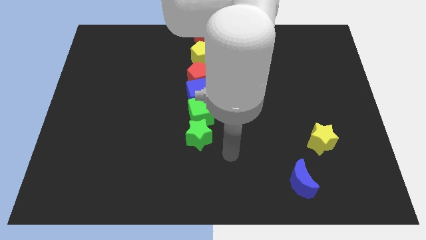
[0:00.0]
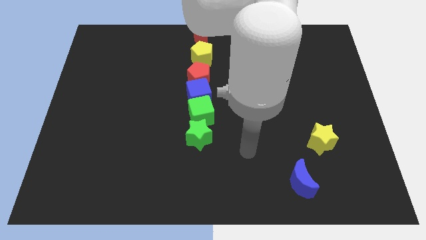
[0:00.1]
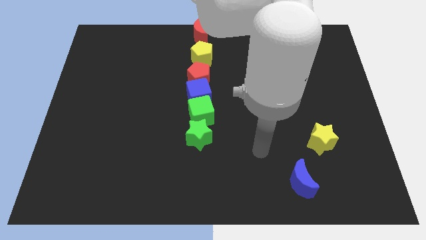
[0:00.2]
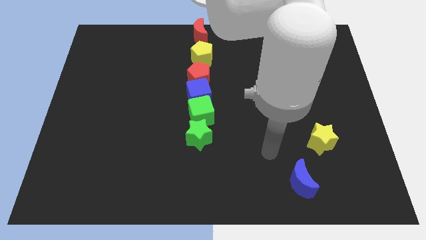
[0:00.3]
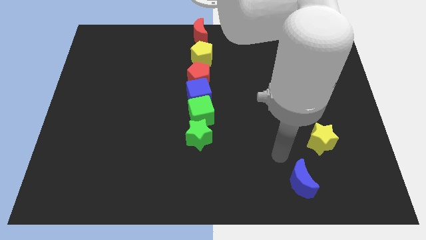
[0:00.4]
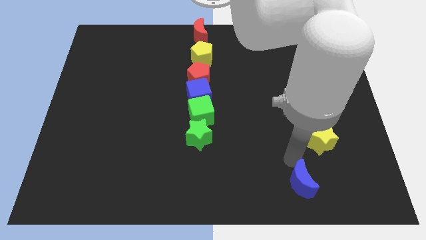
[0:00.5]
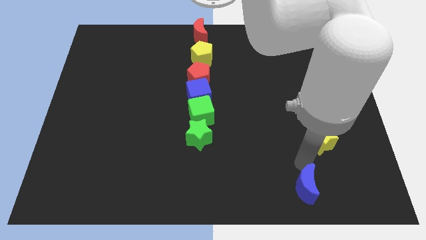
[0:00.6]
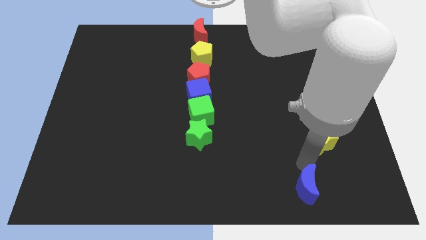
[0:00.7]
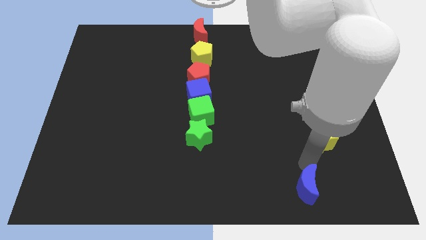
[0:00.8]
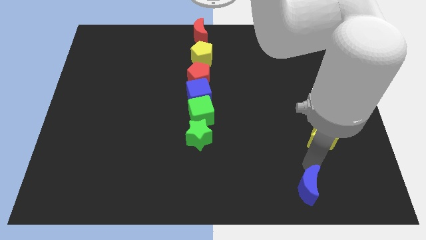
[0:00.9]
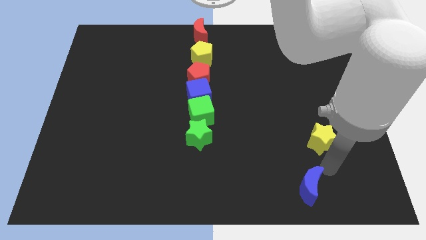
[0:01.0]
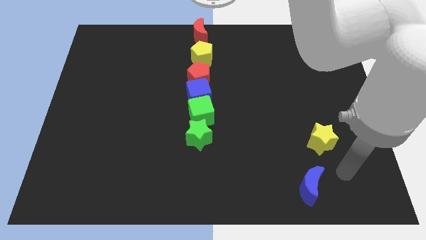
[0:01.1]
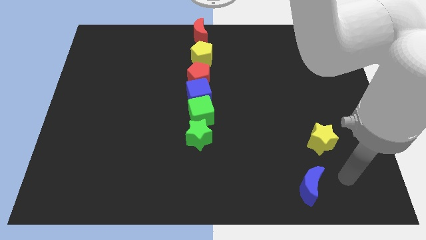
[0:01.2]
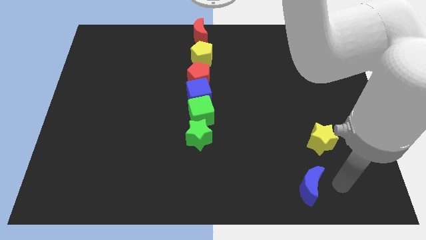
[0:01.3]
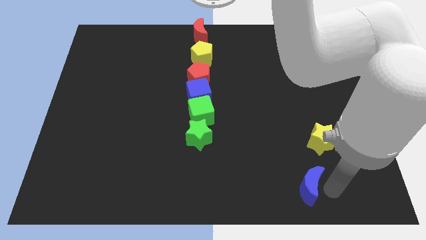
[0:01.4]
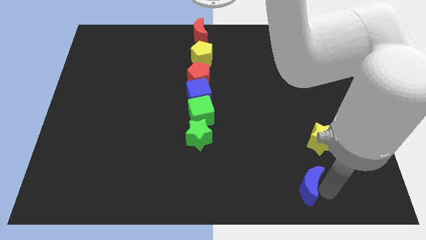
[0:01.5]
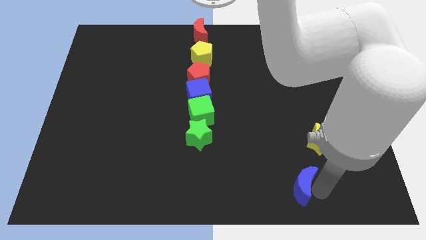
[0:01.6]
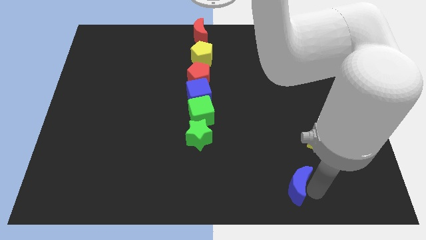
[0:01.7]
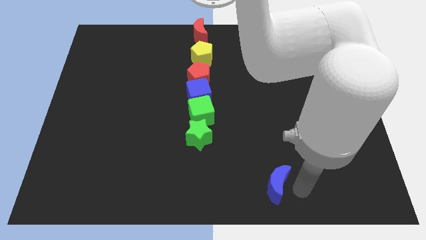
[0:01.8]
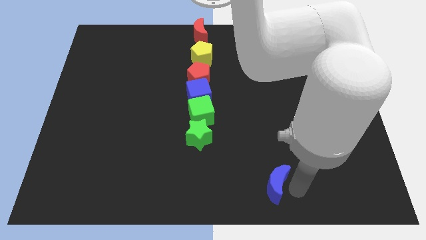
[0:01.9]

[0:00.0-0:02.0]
place blue crescent diagonally left to the yellow star

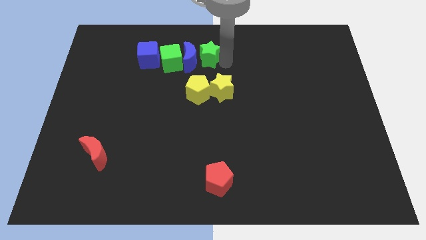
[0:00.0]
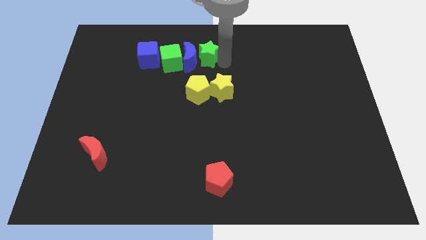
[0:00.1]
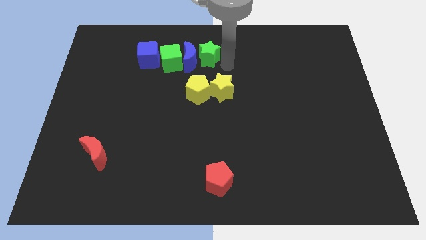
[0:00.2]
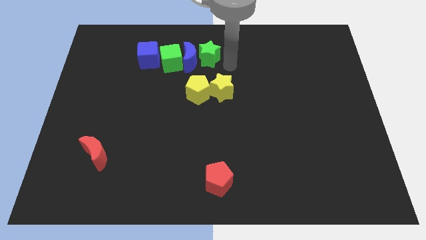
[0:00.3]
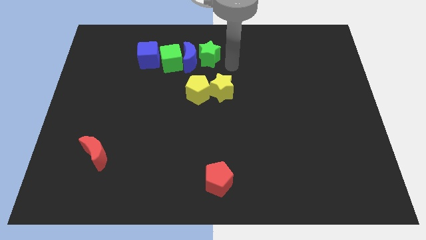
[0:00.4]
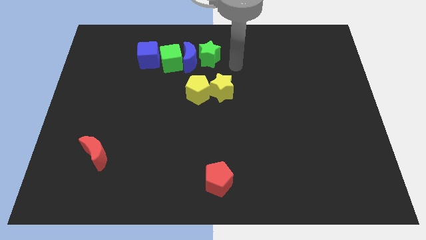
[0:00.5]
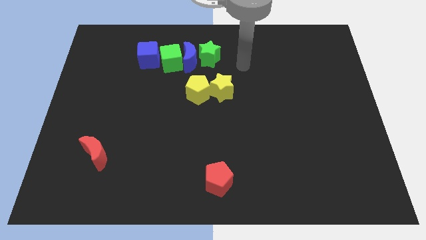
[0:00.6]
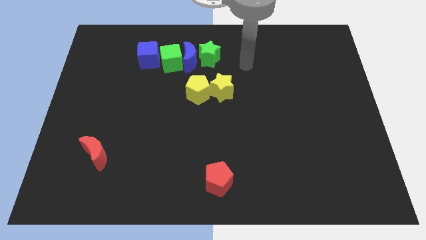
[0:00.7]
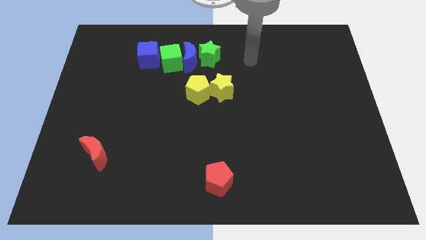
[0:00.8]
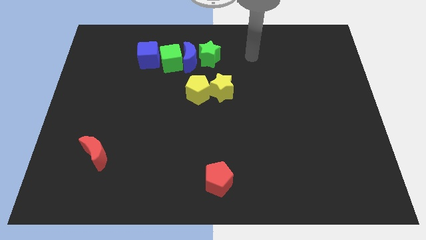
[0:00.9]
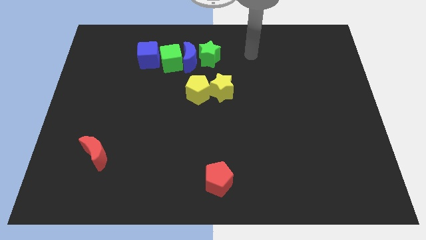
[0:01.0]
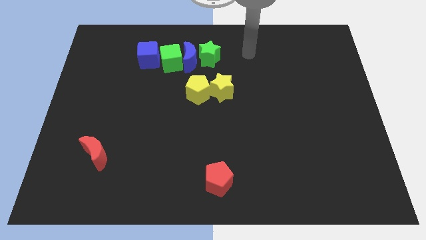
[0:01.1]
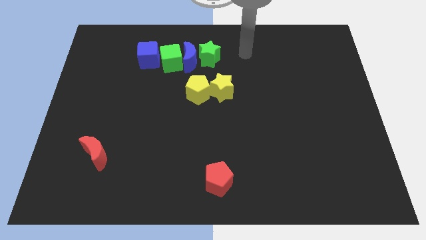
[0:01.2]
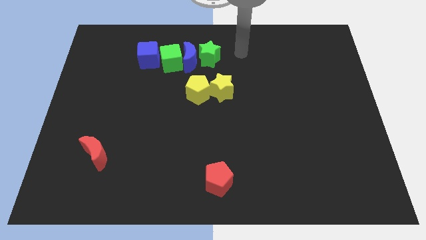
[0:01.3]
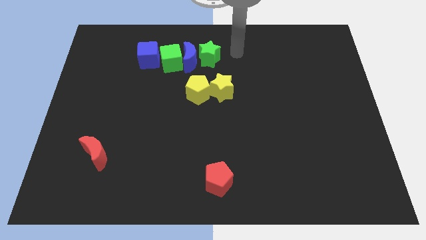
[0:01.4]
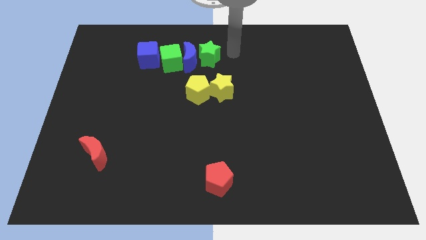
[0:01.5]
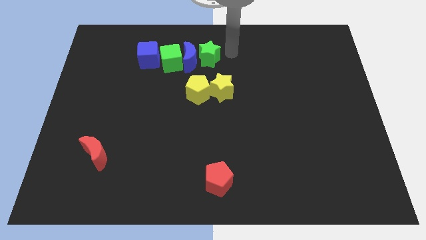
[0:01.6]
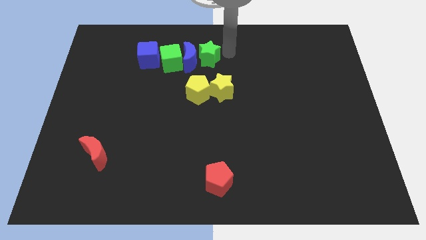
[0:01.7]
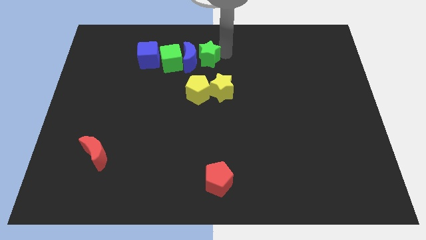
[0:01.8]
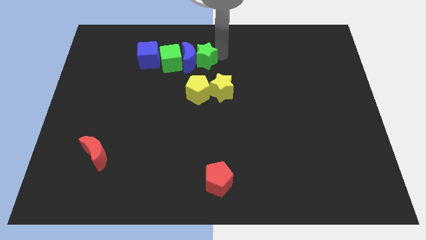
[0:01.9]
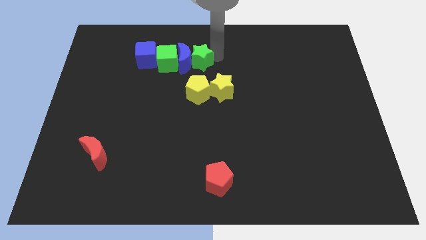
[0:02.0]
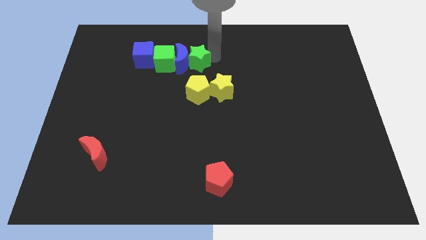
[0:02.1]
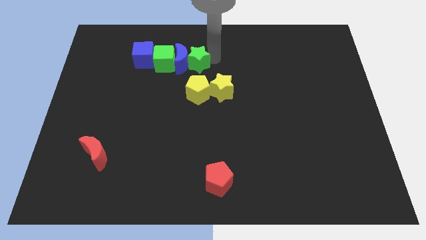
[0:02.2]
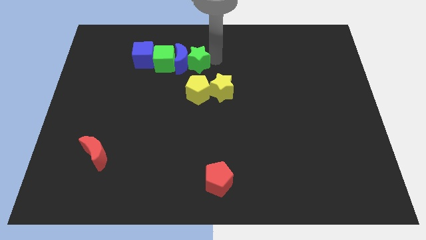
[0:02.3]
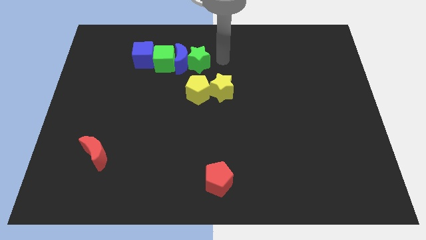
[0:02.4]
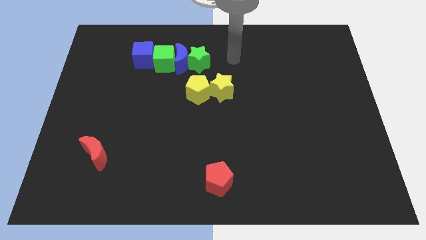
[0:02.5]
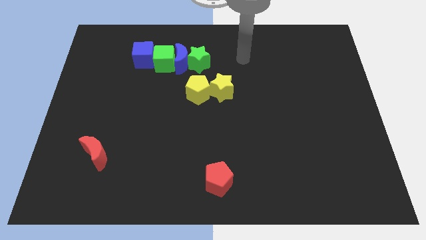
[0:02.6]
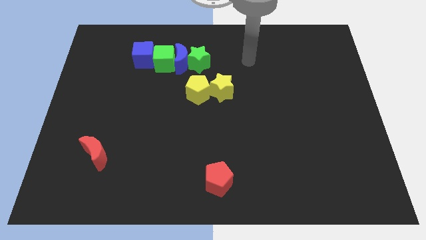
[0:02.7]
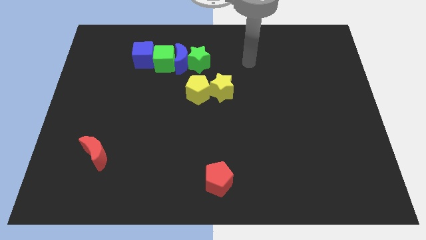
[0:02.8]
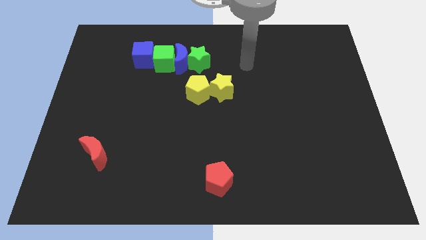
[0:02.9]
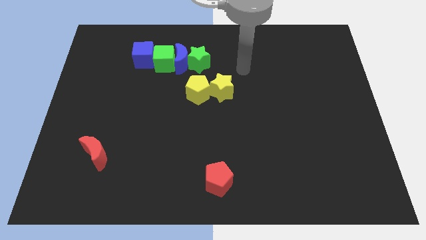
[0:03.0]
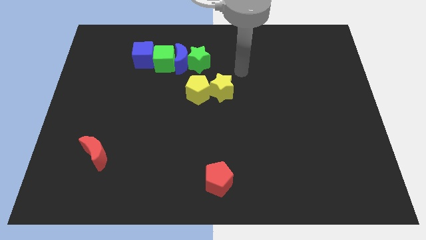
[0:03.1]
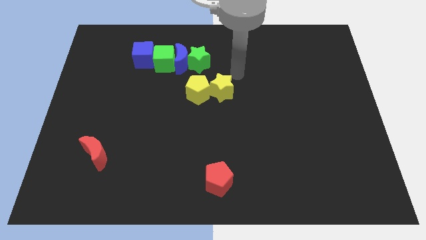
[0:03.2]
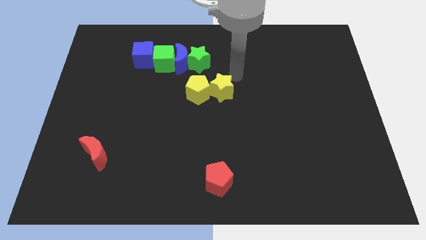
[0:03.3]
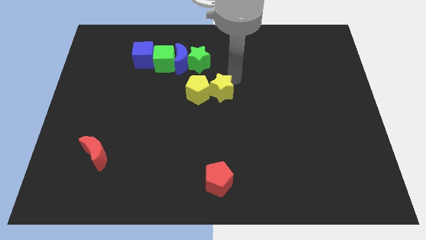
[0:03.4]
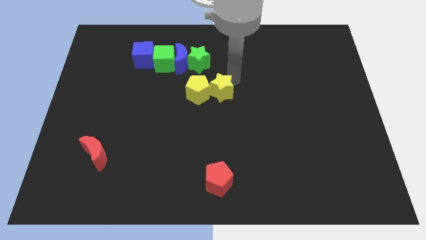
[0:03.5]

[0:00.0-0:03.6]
push the green star into the blue moon

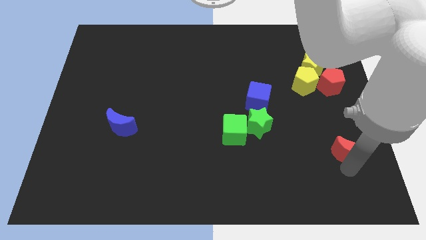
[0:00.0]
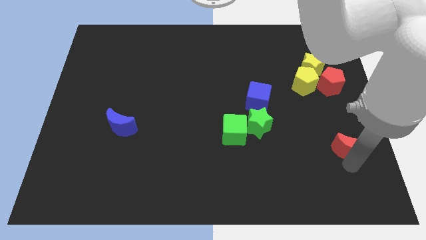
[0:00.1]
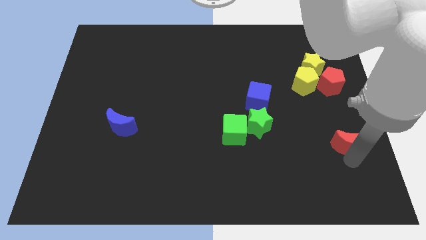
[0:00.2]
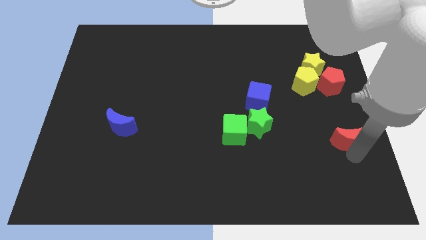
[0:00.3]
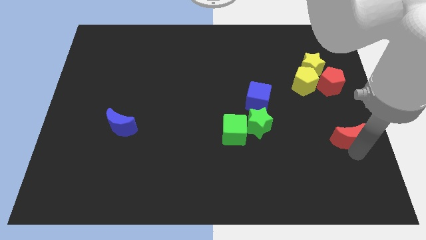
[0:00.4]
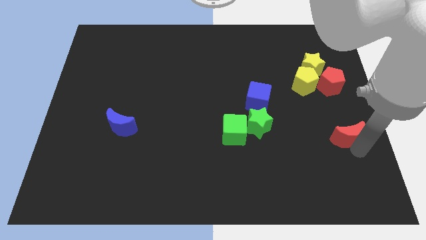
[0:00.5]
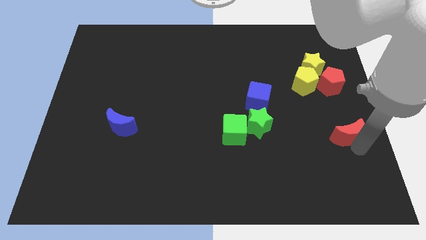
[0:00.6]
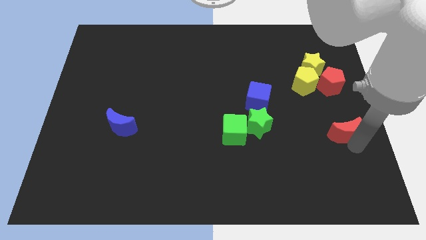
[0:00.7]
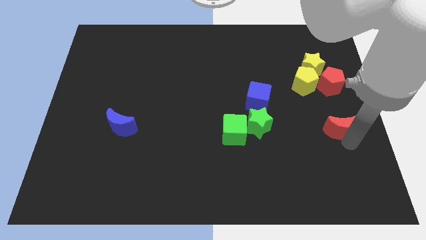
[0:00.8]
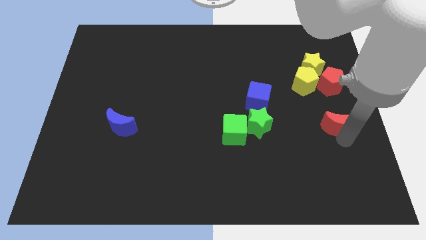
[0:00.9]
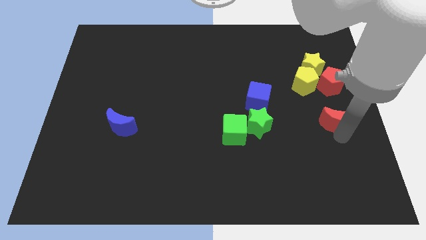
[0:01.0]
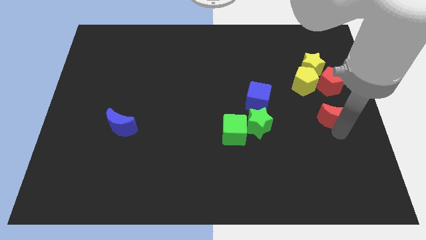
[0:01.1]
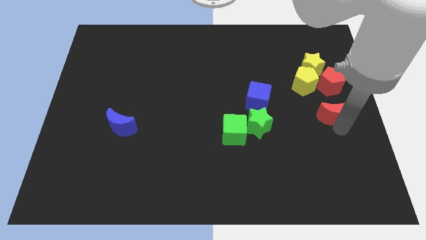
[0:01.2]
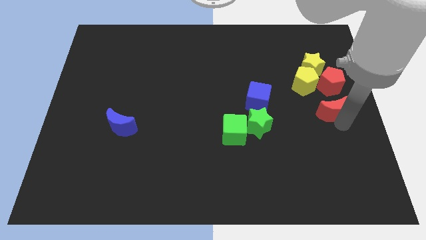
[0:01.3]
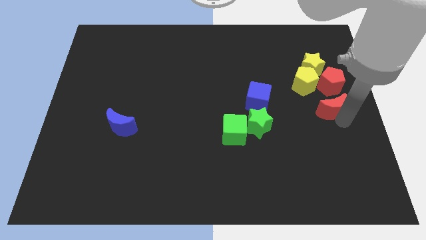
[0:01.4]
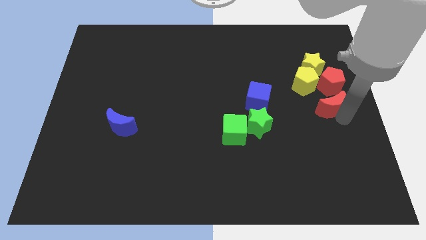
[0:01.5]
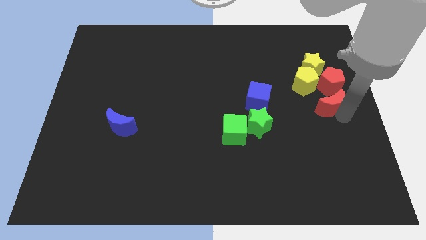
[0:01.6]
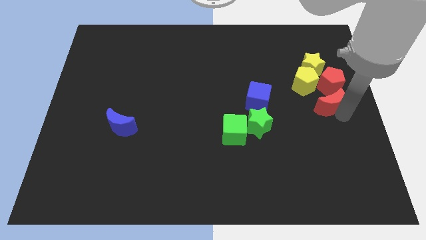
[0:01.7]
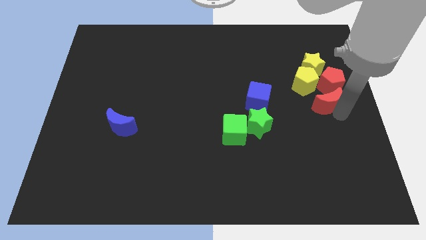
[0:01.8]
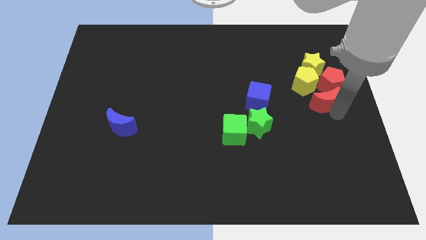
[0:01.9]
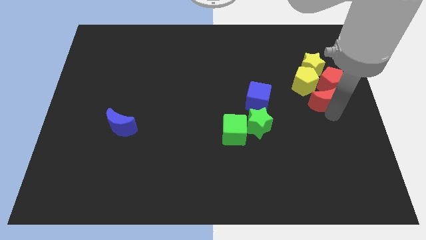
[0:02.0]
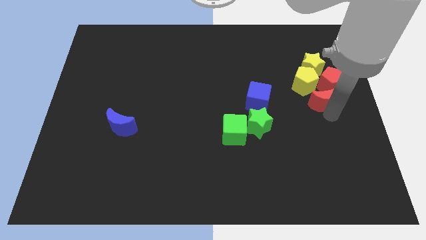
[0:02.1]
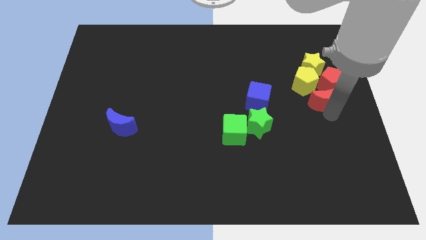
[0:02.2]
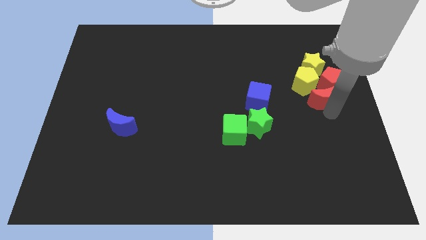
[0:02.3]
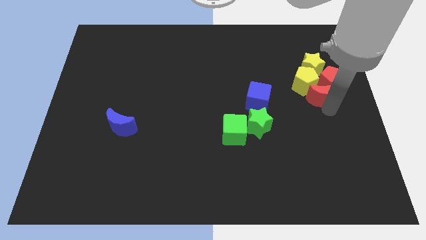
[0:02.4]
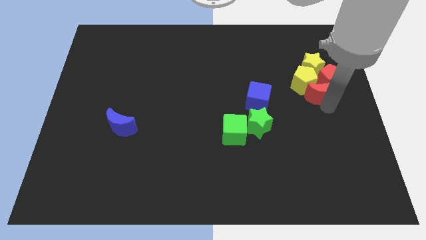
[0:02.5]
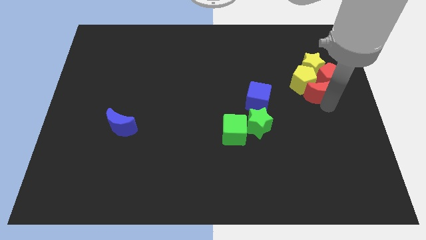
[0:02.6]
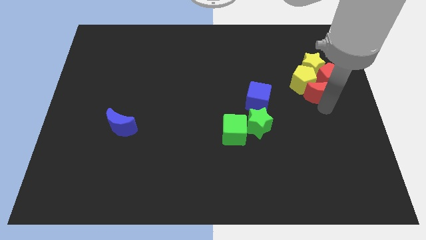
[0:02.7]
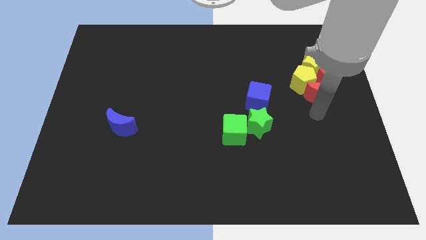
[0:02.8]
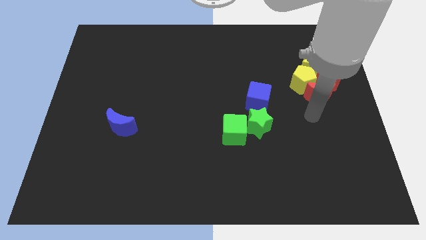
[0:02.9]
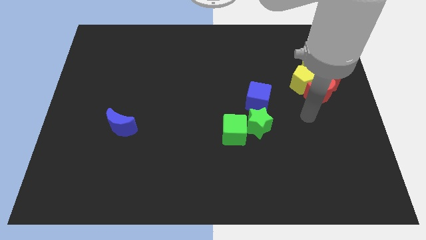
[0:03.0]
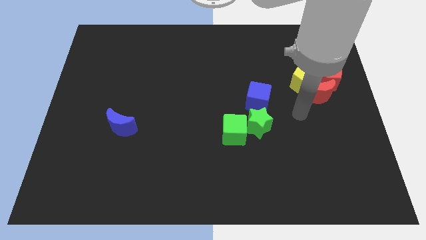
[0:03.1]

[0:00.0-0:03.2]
push red moon into the group of blocks

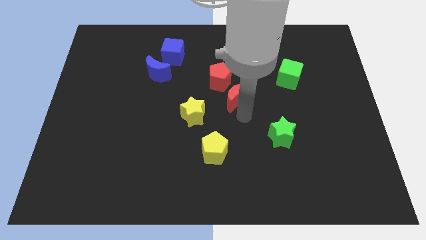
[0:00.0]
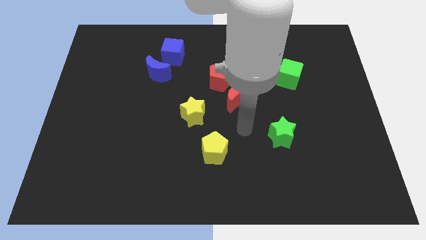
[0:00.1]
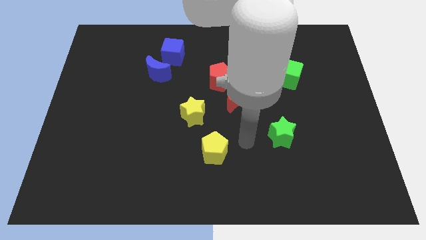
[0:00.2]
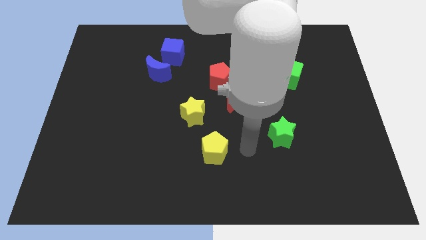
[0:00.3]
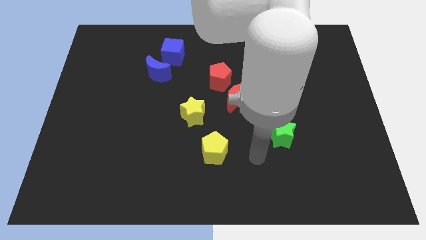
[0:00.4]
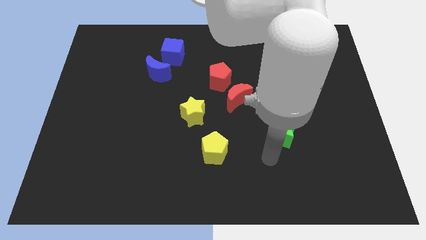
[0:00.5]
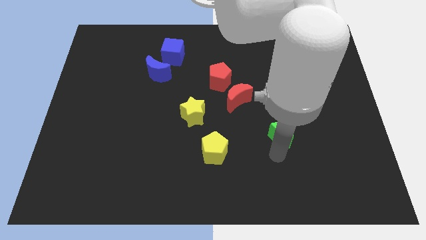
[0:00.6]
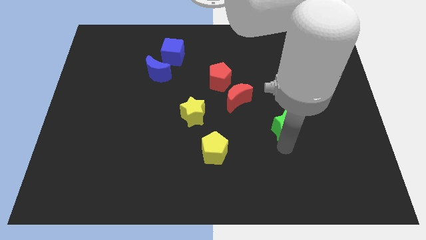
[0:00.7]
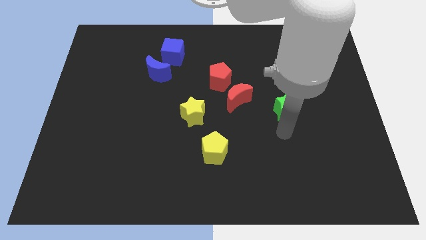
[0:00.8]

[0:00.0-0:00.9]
move your arm away from the red moon
